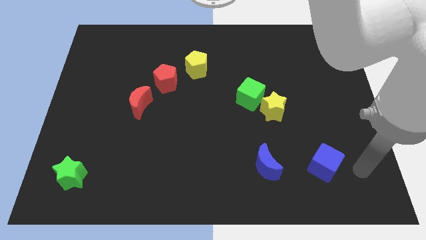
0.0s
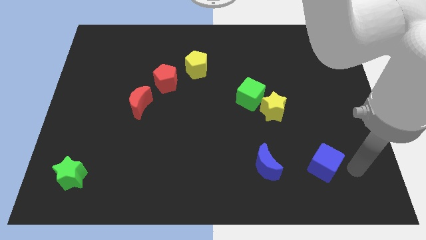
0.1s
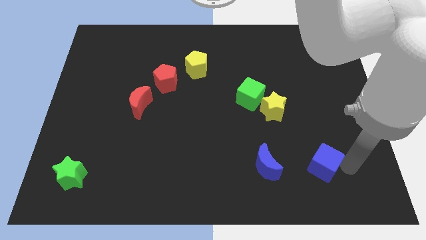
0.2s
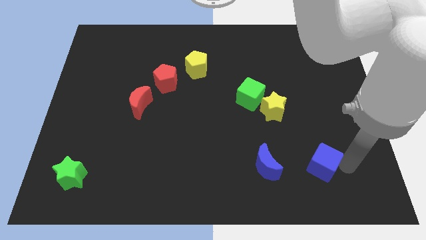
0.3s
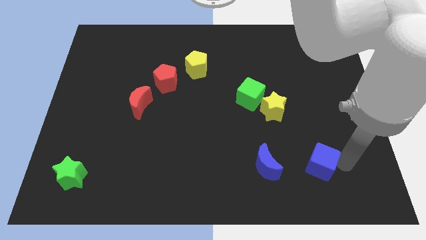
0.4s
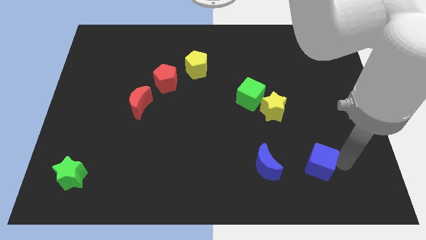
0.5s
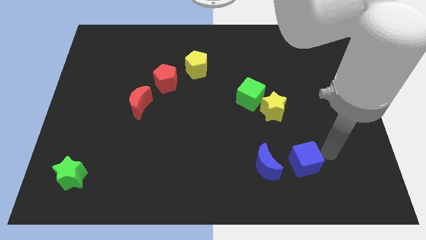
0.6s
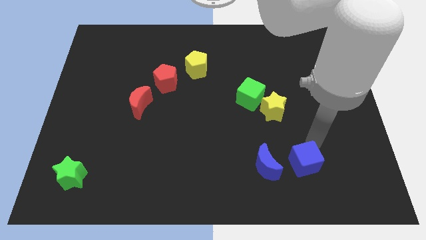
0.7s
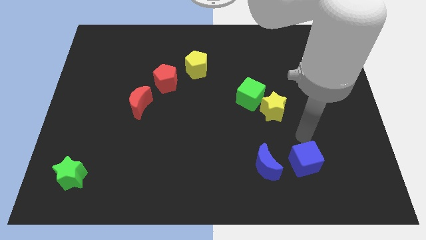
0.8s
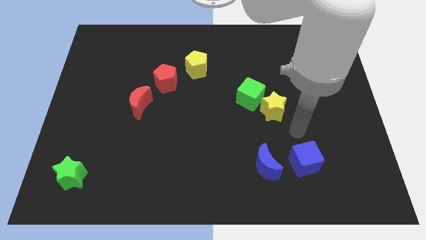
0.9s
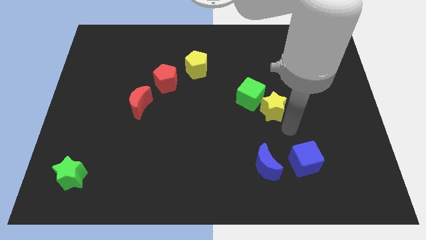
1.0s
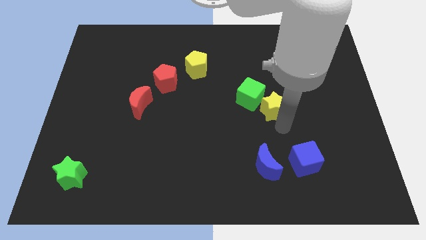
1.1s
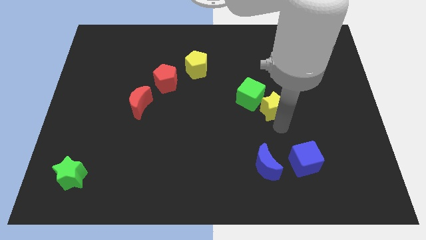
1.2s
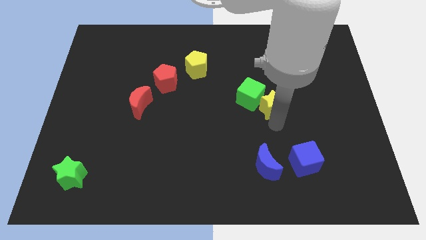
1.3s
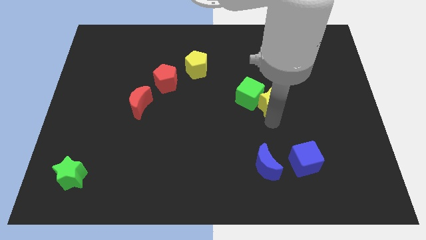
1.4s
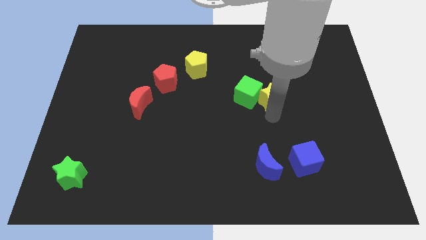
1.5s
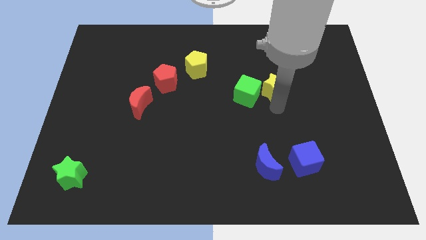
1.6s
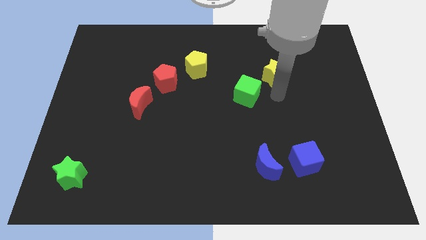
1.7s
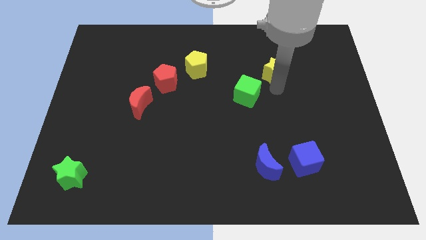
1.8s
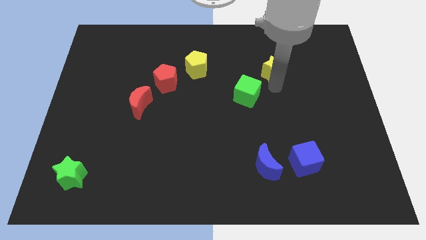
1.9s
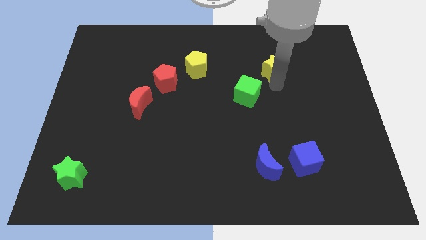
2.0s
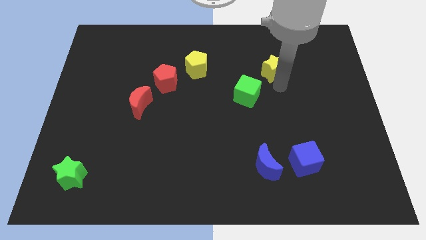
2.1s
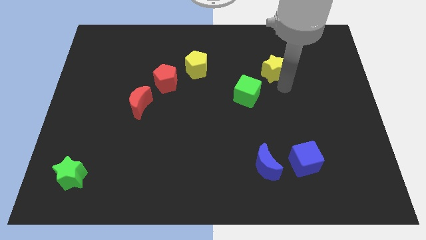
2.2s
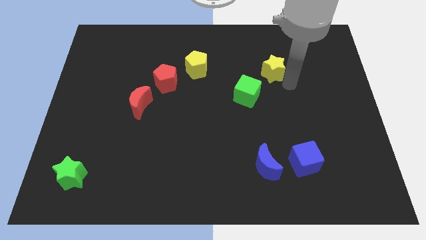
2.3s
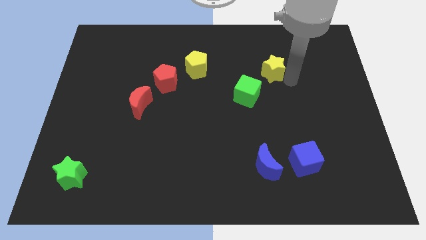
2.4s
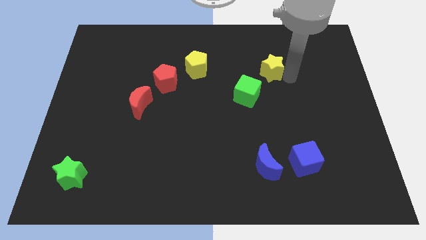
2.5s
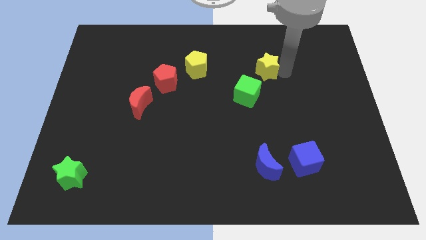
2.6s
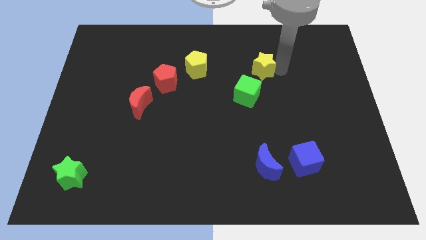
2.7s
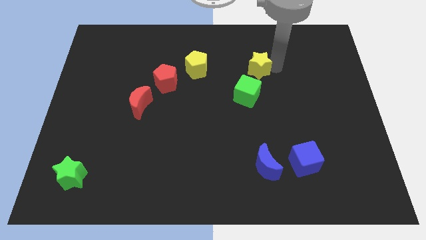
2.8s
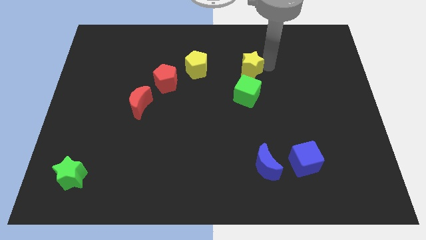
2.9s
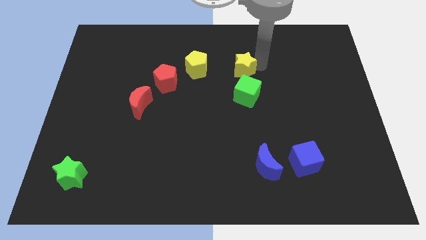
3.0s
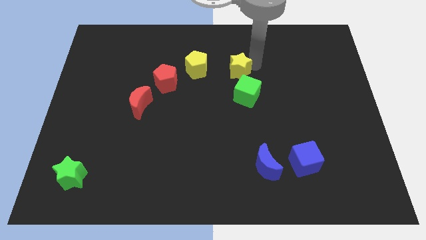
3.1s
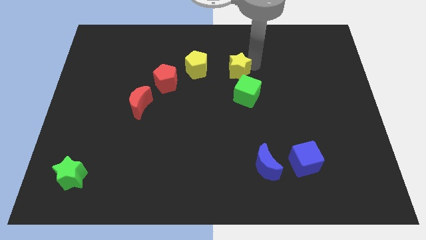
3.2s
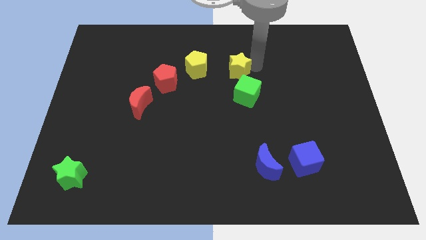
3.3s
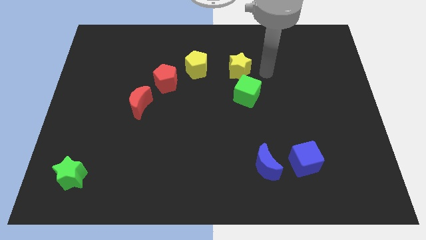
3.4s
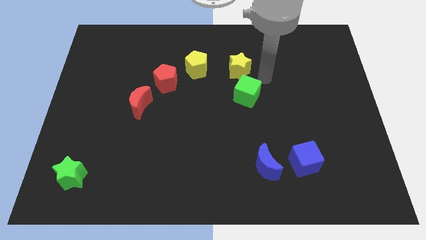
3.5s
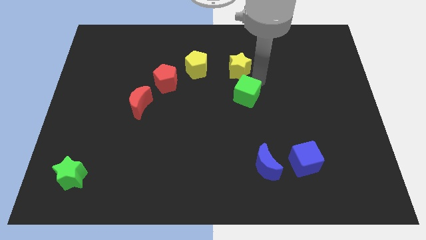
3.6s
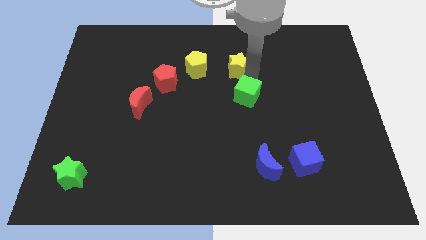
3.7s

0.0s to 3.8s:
move the blue cube close towards the blue crescent

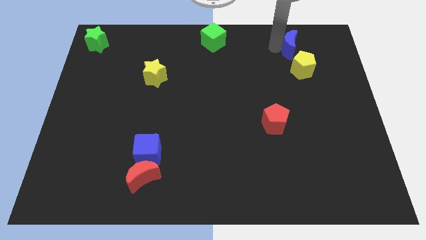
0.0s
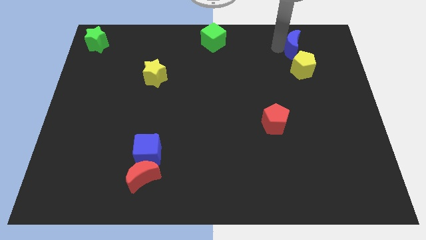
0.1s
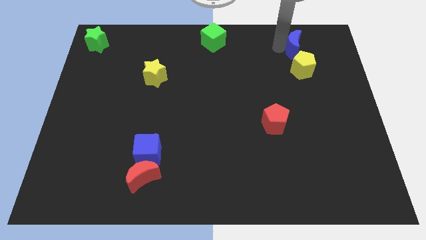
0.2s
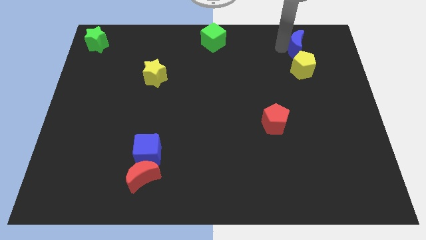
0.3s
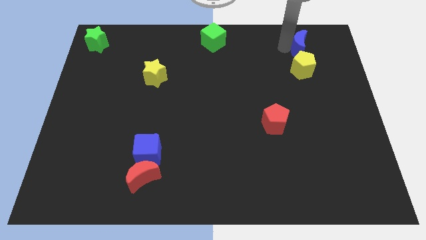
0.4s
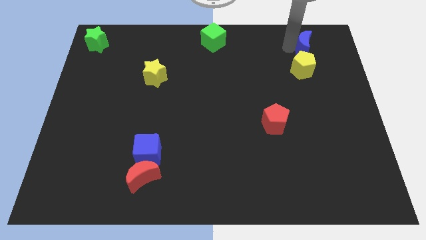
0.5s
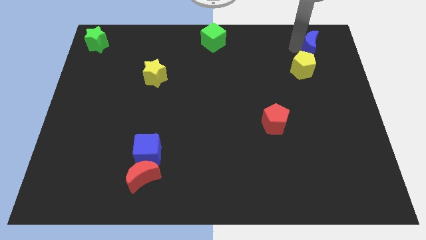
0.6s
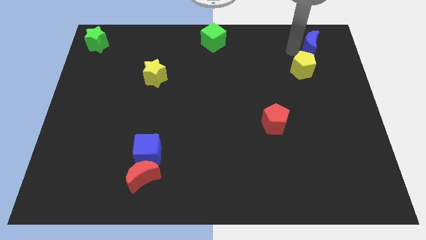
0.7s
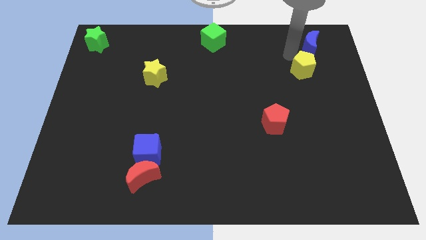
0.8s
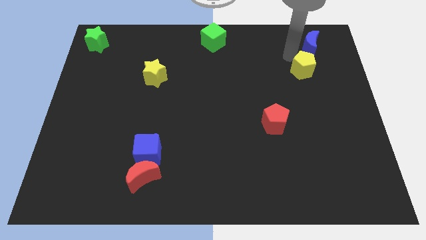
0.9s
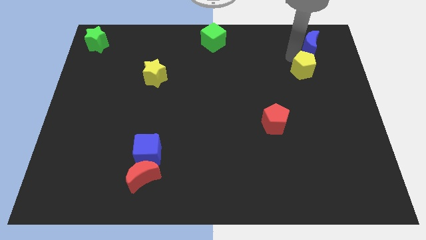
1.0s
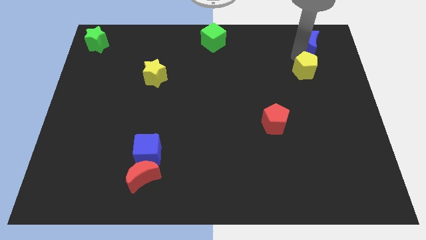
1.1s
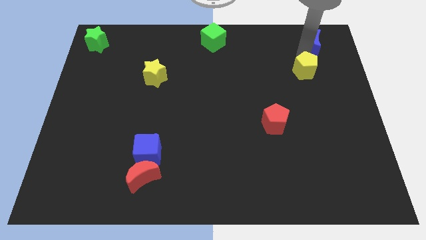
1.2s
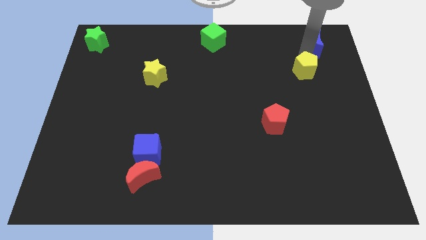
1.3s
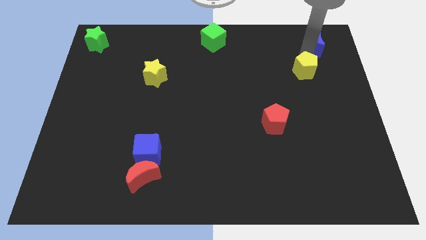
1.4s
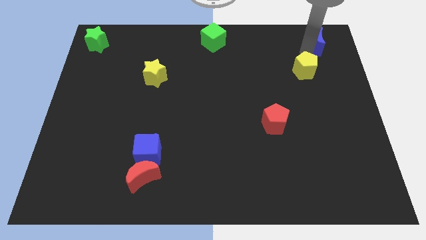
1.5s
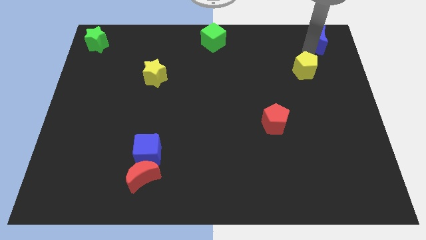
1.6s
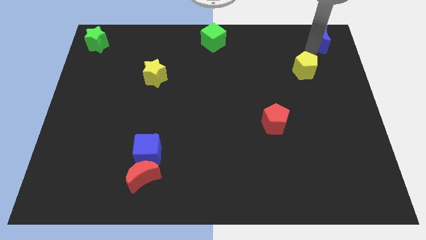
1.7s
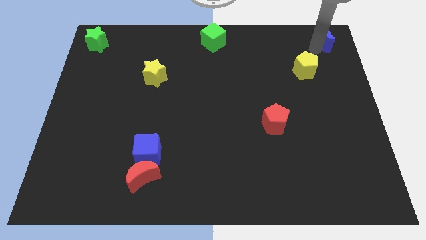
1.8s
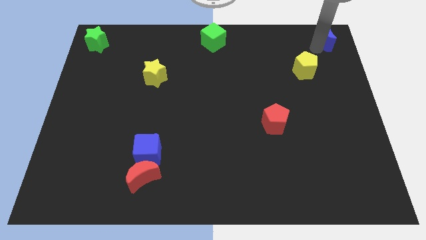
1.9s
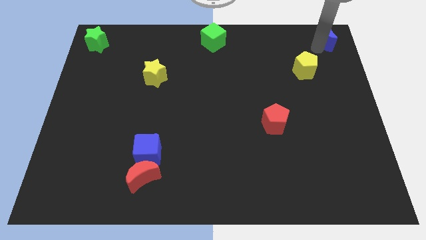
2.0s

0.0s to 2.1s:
move the blue moon to the top right corner

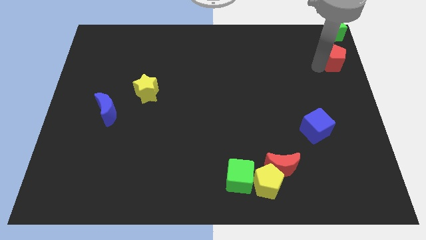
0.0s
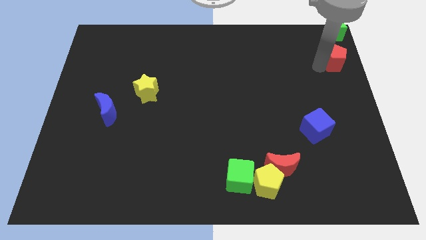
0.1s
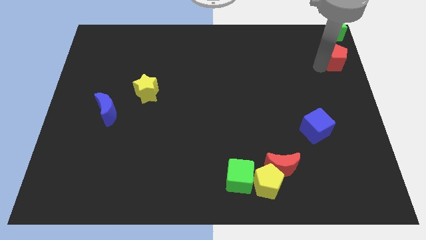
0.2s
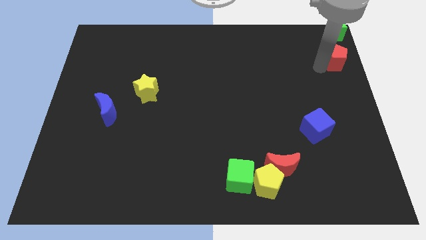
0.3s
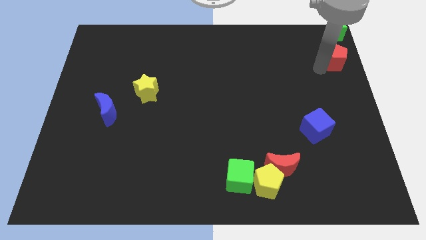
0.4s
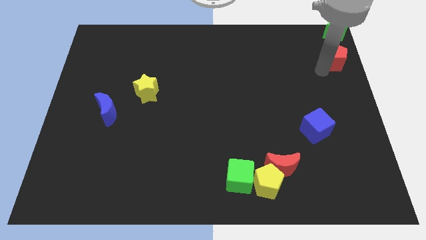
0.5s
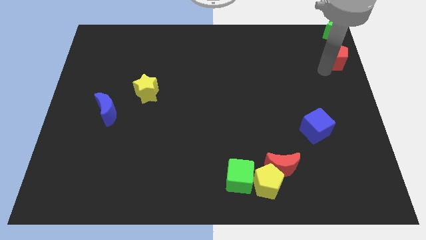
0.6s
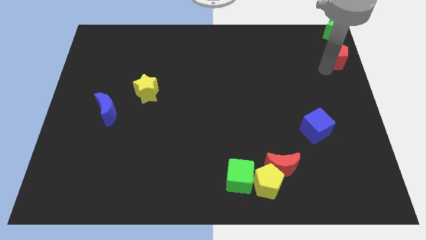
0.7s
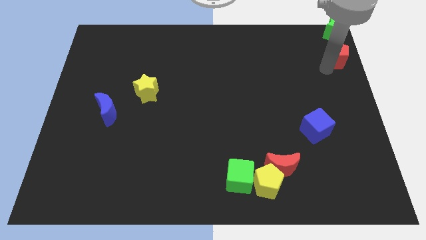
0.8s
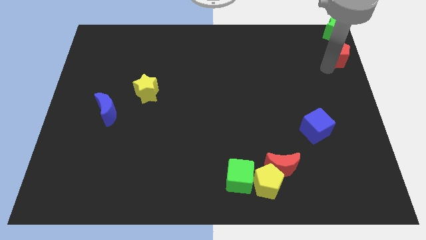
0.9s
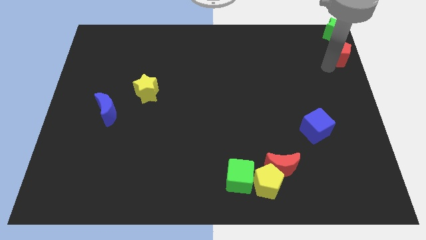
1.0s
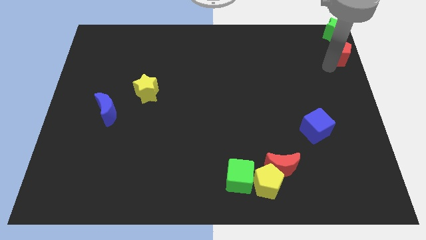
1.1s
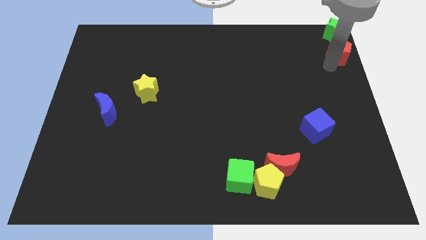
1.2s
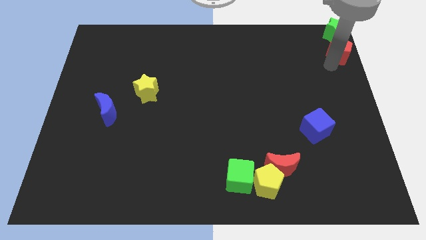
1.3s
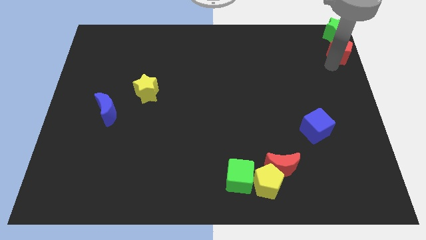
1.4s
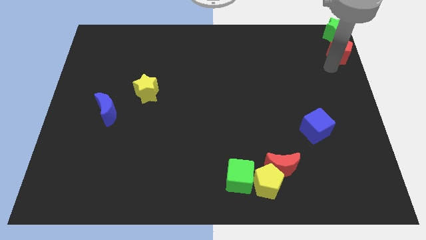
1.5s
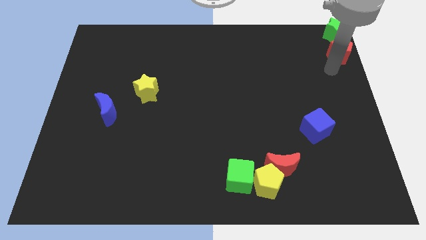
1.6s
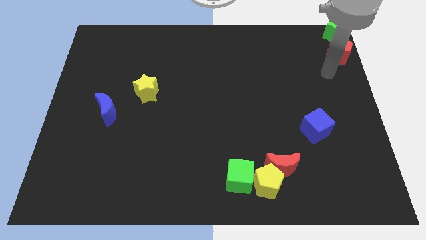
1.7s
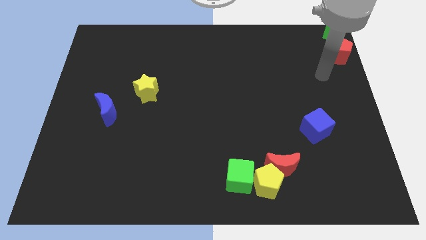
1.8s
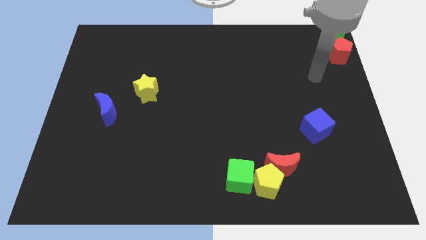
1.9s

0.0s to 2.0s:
push the red pentagon at the bottom of the green star

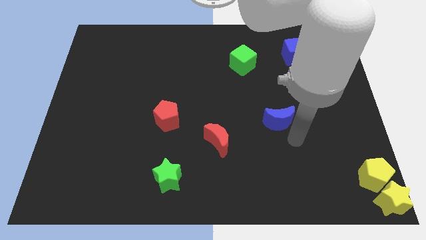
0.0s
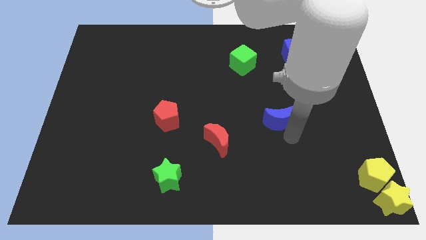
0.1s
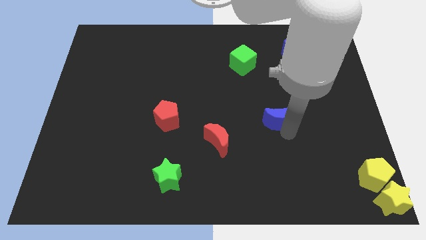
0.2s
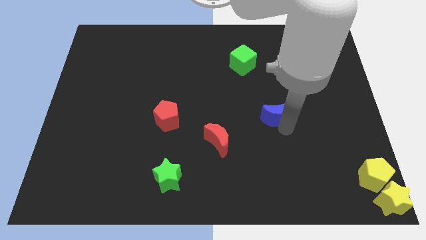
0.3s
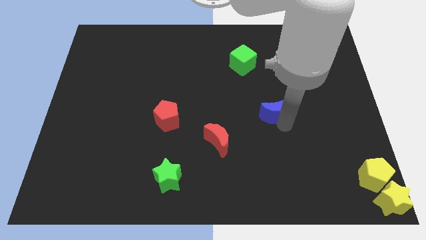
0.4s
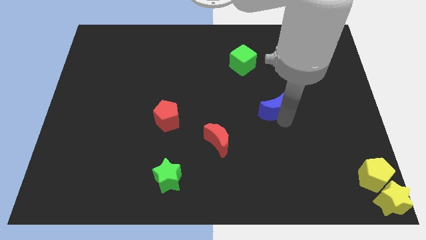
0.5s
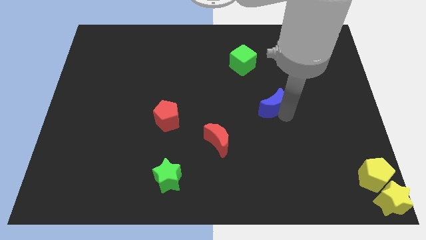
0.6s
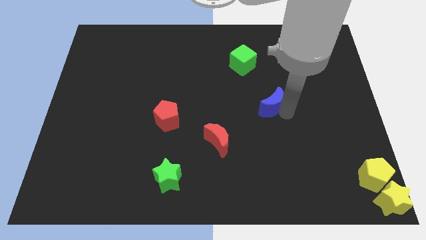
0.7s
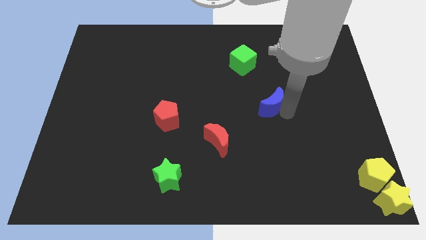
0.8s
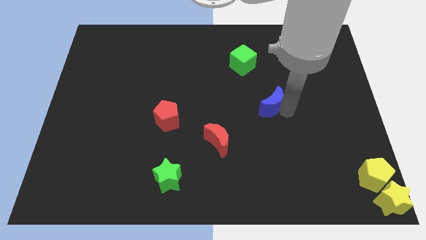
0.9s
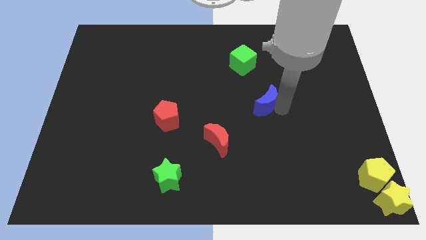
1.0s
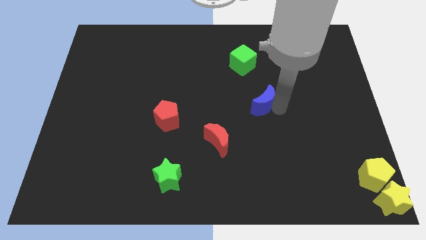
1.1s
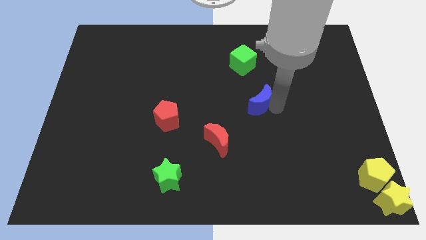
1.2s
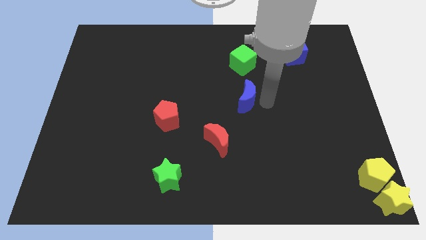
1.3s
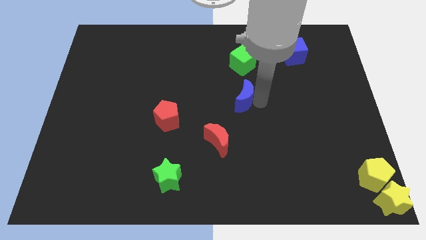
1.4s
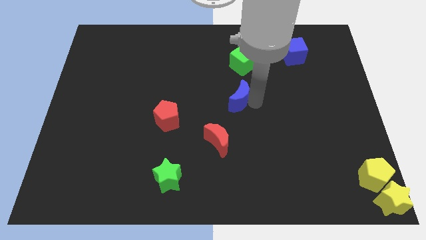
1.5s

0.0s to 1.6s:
place blue moon to the bottom of the green cube
